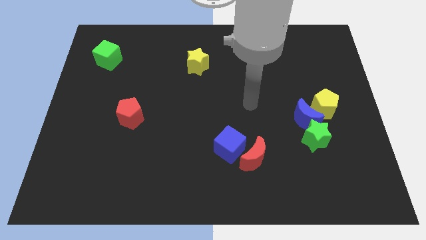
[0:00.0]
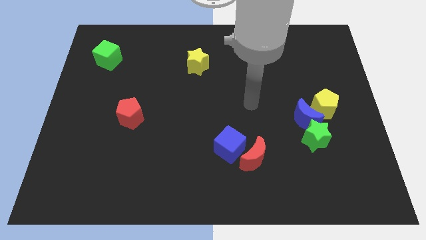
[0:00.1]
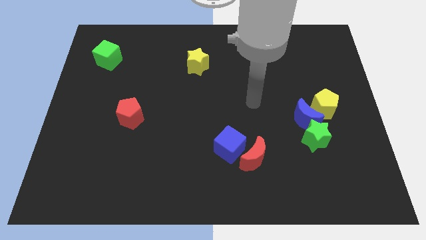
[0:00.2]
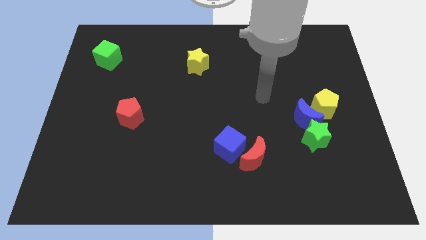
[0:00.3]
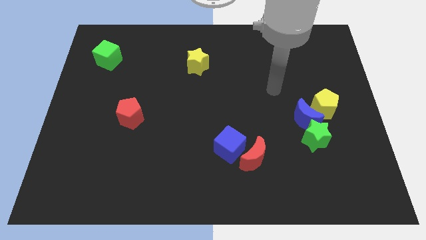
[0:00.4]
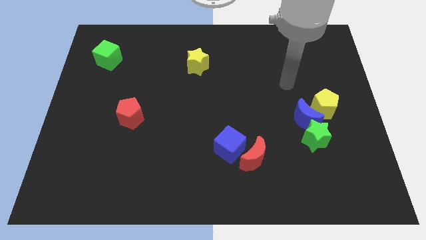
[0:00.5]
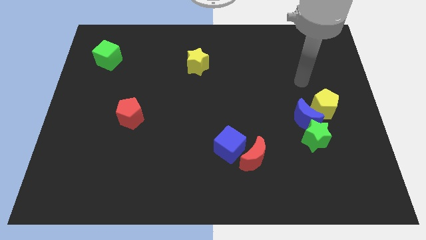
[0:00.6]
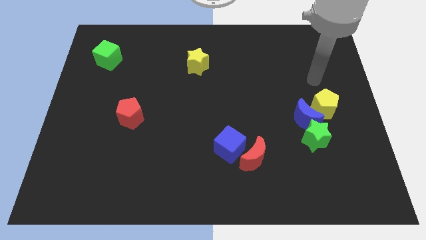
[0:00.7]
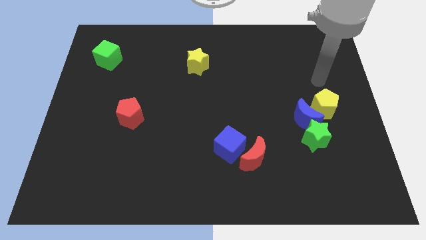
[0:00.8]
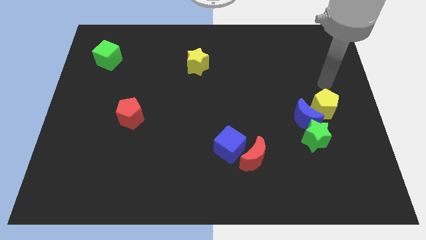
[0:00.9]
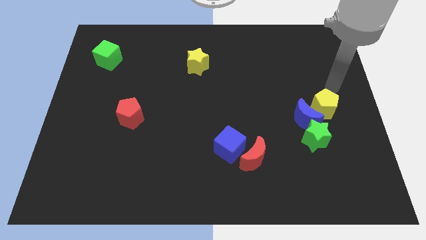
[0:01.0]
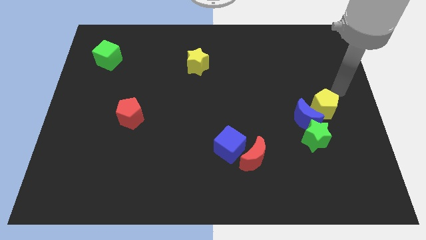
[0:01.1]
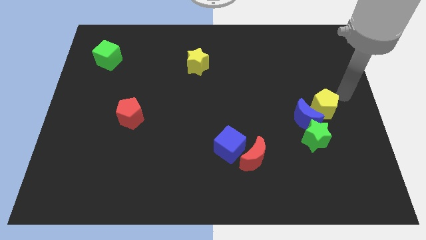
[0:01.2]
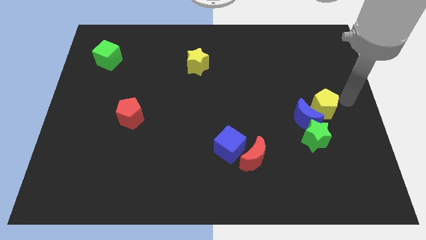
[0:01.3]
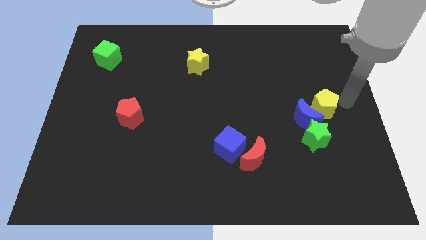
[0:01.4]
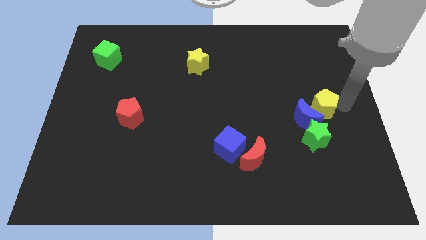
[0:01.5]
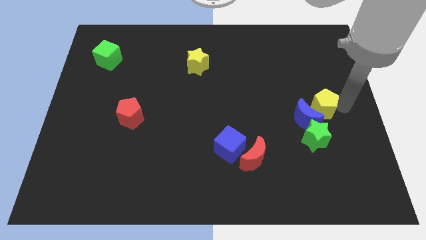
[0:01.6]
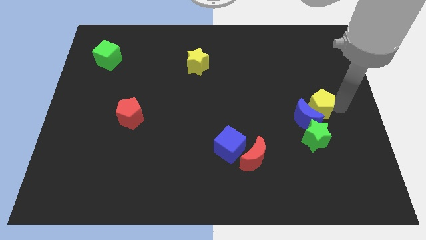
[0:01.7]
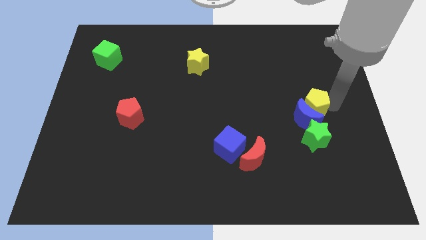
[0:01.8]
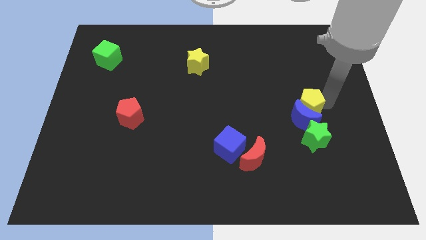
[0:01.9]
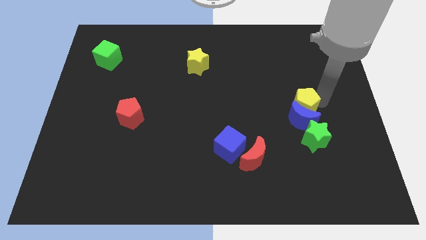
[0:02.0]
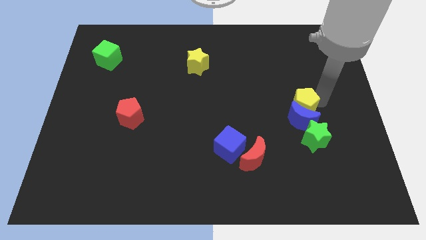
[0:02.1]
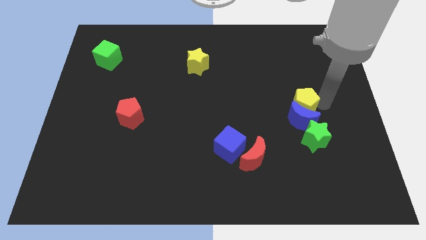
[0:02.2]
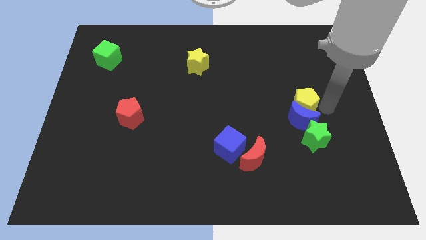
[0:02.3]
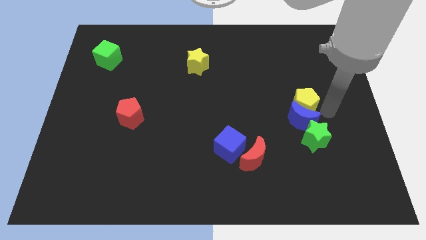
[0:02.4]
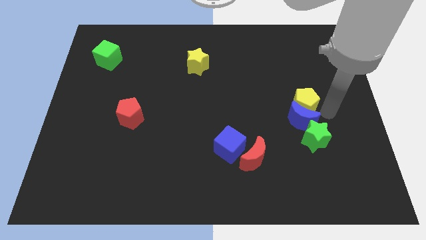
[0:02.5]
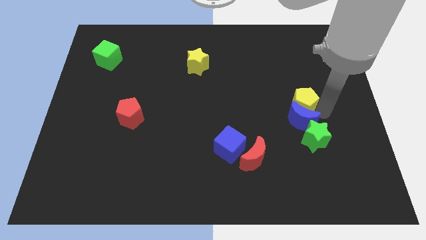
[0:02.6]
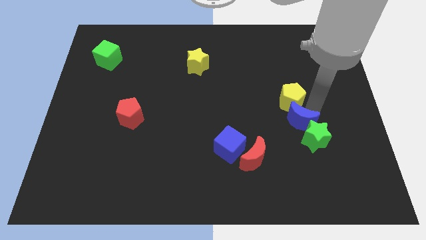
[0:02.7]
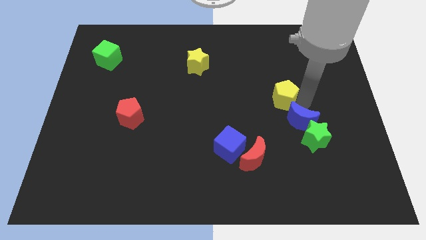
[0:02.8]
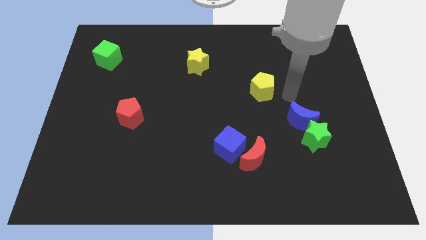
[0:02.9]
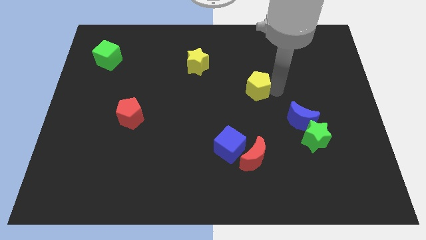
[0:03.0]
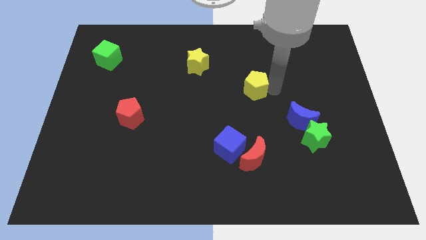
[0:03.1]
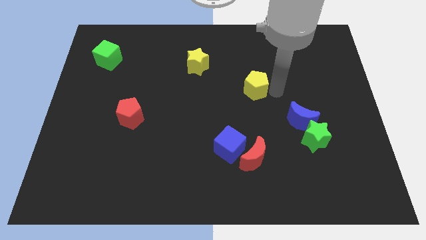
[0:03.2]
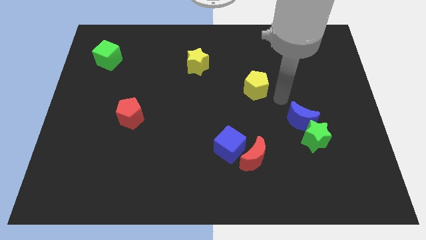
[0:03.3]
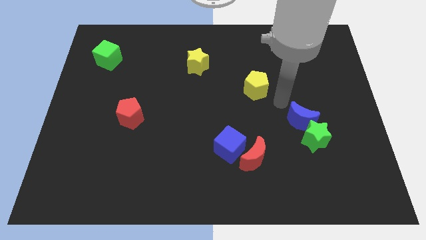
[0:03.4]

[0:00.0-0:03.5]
move the yellow pentagon diagonal to the yellow star

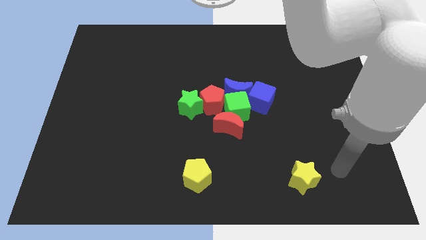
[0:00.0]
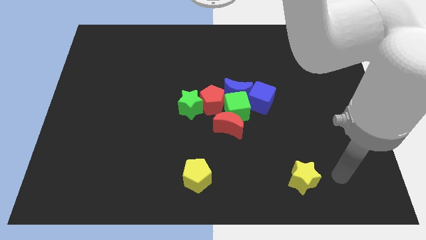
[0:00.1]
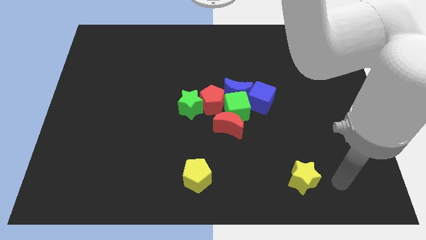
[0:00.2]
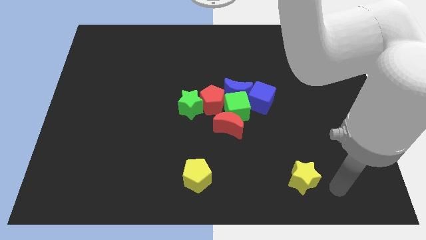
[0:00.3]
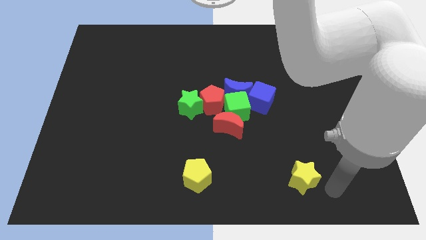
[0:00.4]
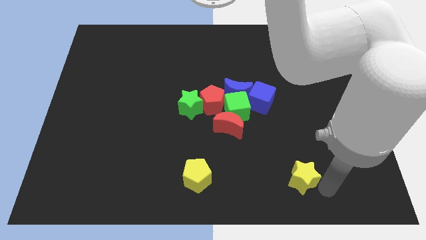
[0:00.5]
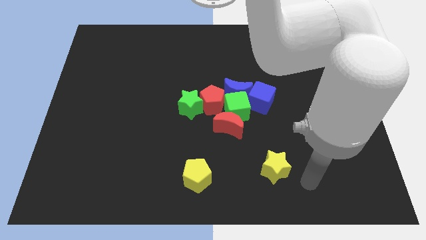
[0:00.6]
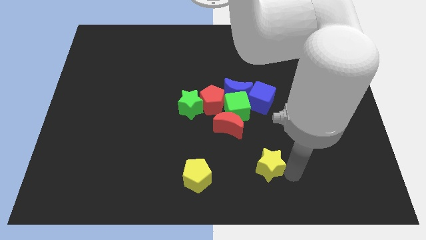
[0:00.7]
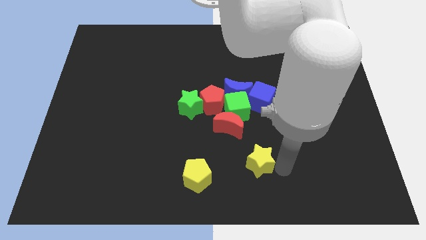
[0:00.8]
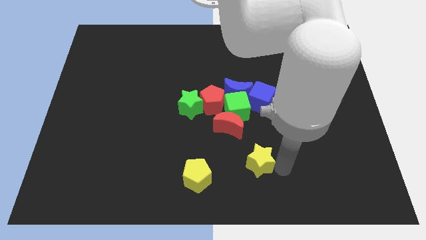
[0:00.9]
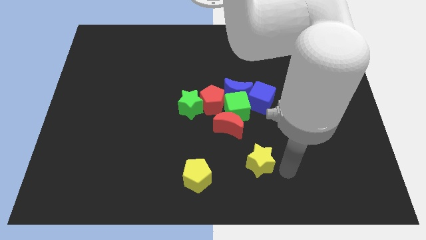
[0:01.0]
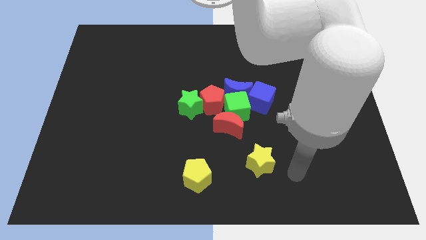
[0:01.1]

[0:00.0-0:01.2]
push the yellow star towards the yellow pentagon

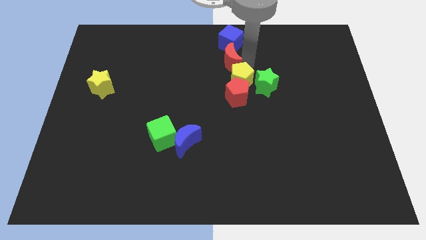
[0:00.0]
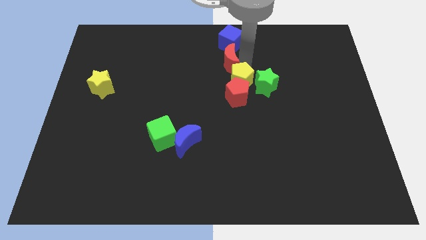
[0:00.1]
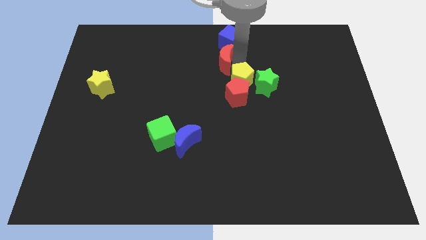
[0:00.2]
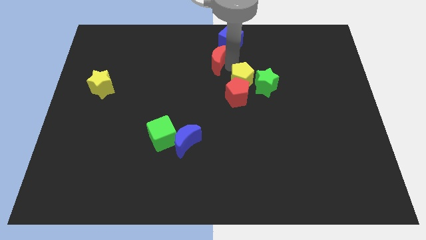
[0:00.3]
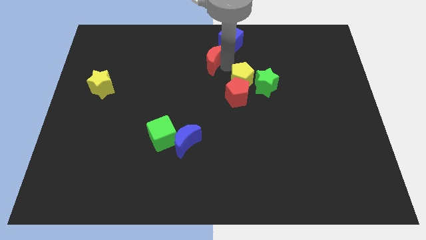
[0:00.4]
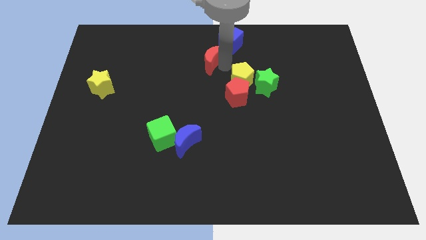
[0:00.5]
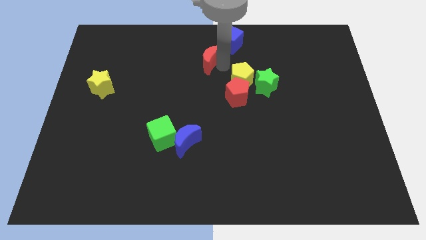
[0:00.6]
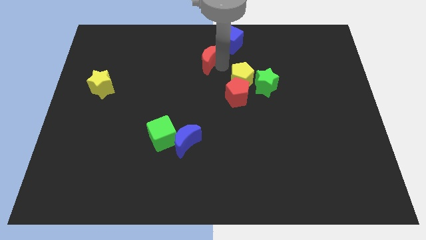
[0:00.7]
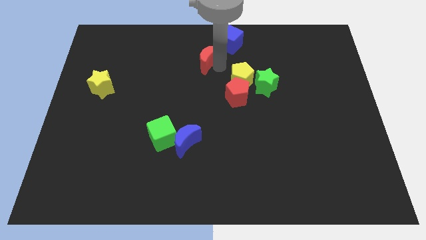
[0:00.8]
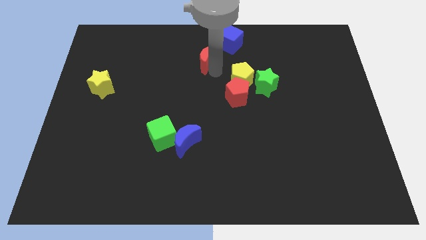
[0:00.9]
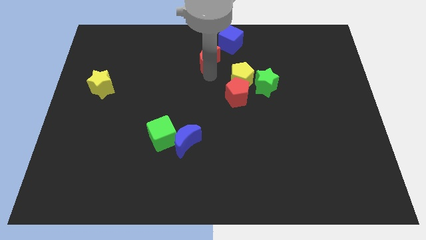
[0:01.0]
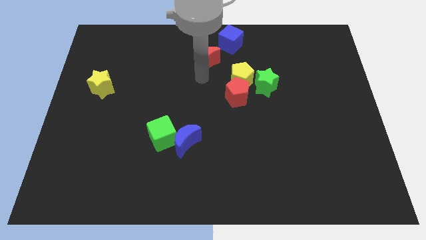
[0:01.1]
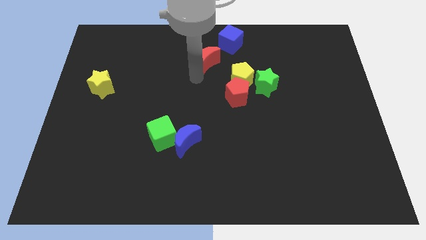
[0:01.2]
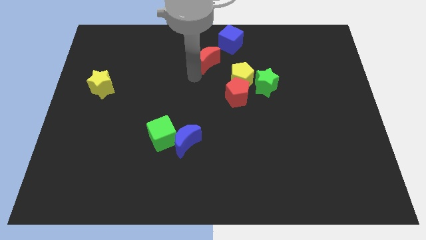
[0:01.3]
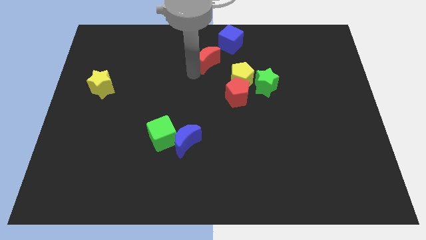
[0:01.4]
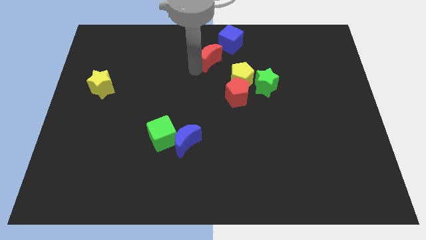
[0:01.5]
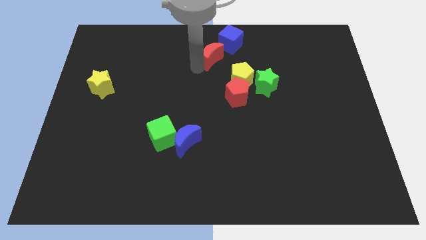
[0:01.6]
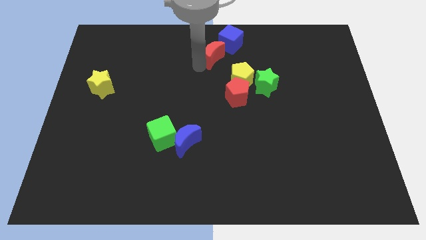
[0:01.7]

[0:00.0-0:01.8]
push the red crescent diagonally on the bottom left side of the blue cube

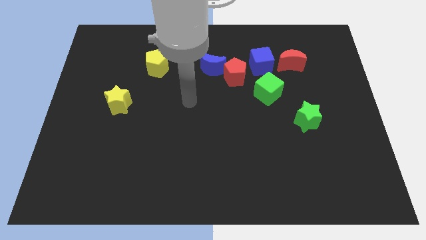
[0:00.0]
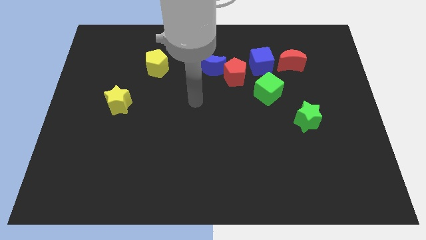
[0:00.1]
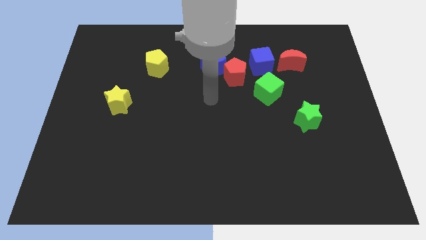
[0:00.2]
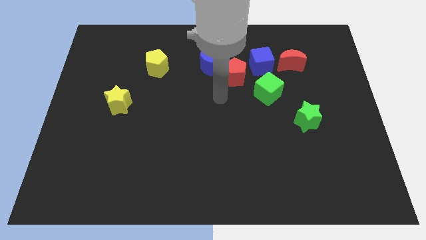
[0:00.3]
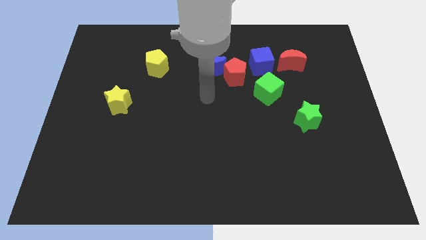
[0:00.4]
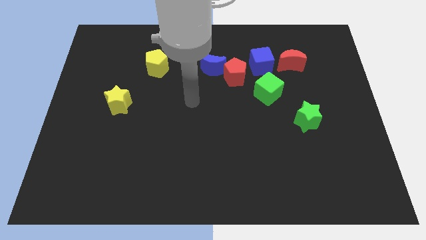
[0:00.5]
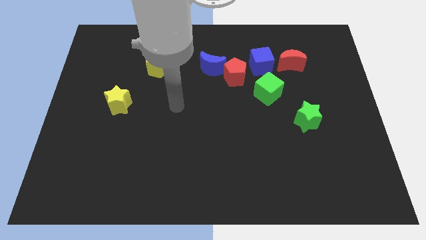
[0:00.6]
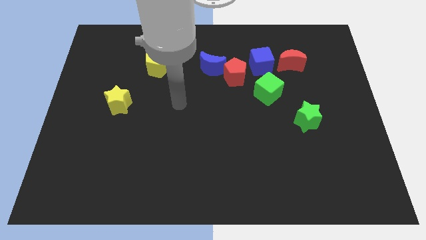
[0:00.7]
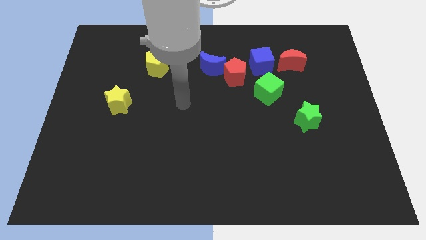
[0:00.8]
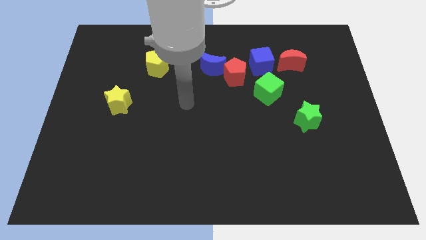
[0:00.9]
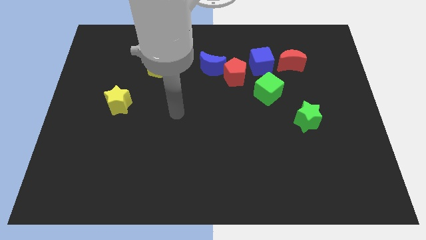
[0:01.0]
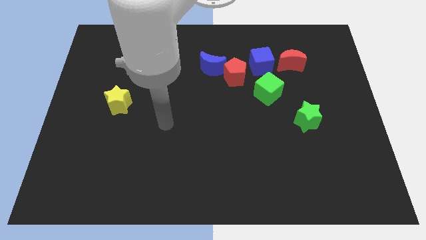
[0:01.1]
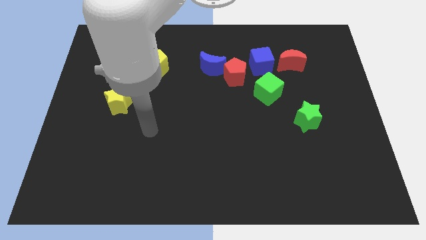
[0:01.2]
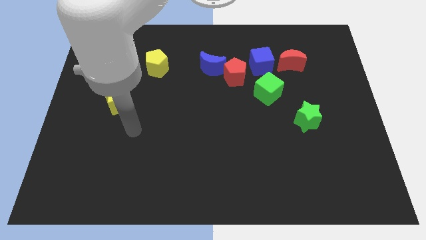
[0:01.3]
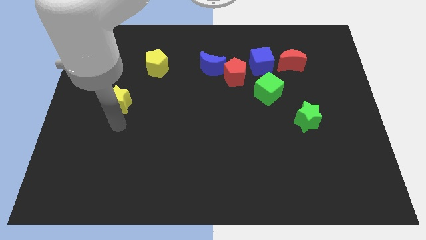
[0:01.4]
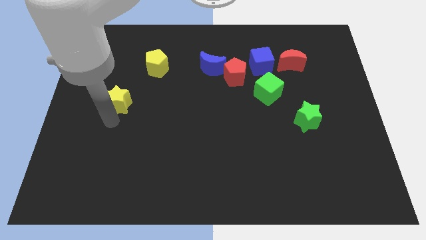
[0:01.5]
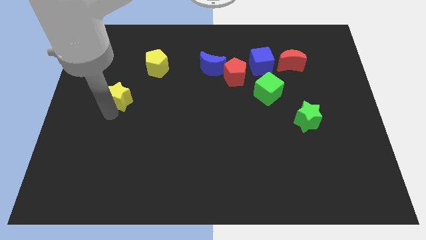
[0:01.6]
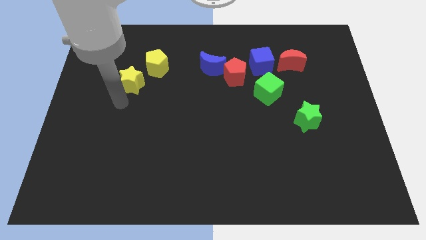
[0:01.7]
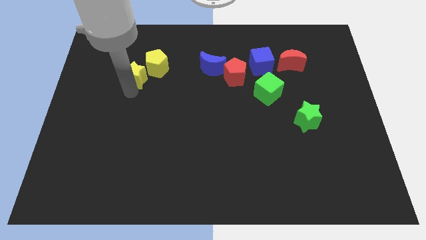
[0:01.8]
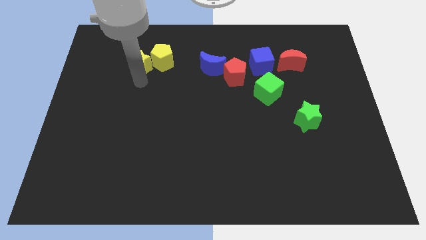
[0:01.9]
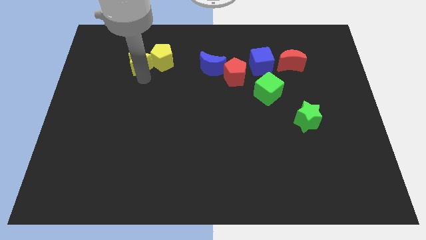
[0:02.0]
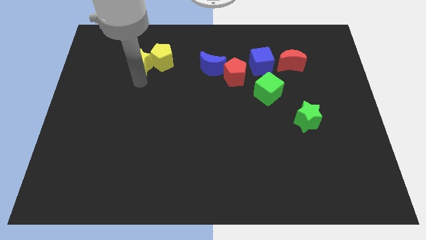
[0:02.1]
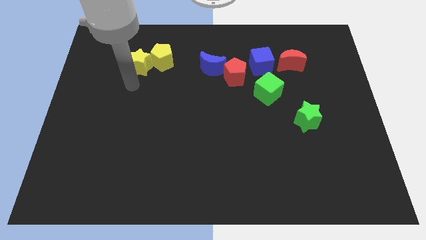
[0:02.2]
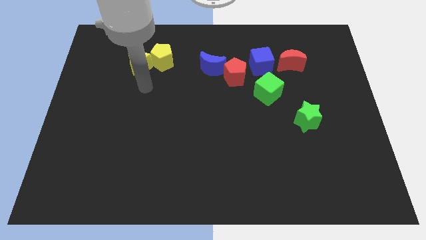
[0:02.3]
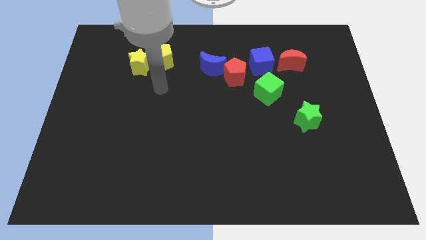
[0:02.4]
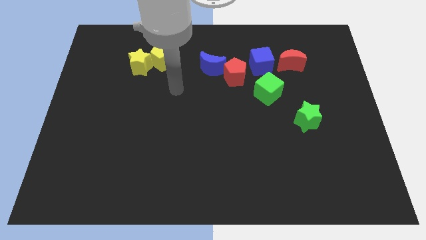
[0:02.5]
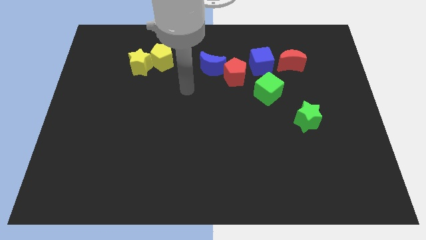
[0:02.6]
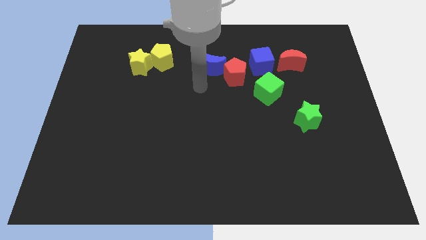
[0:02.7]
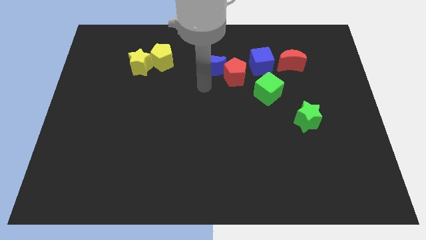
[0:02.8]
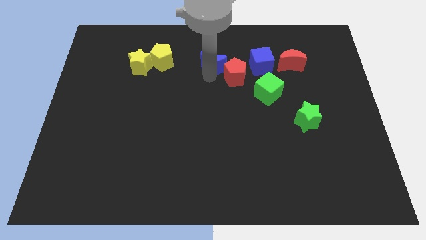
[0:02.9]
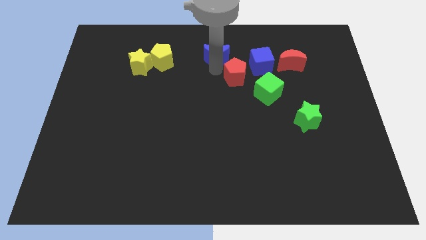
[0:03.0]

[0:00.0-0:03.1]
place the yellow star to the left of the yellow pentagon
